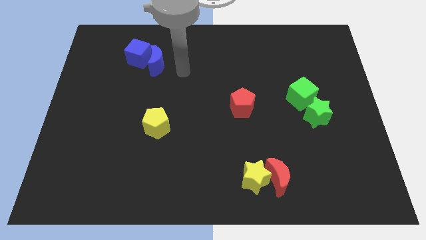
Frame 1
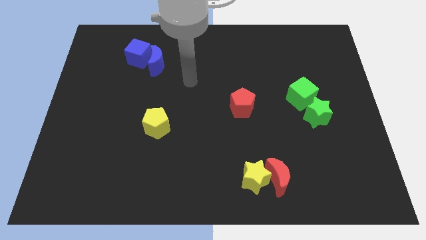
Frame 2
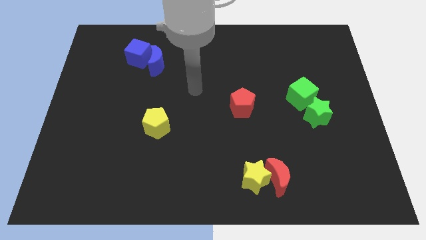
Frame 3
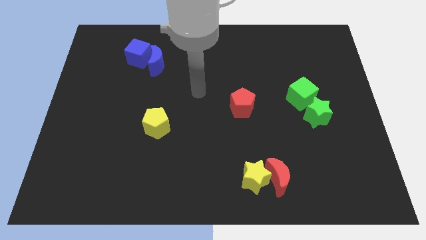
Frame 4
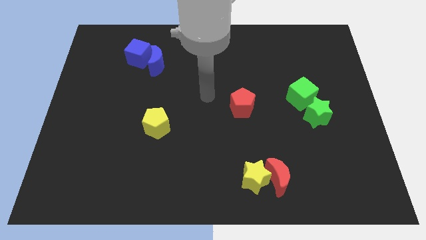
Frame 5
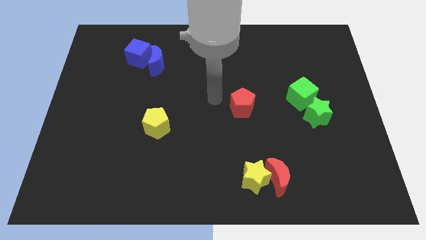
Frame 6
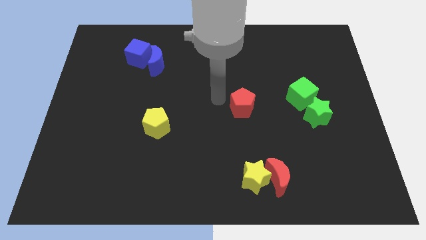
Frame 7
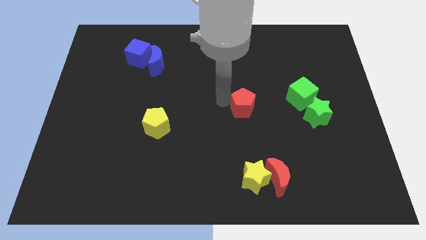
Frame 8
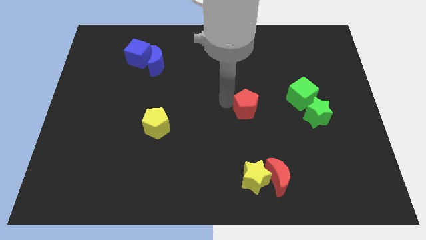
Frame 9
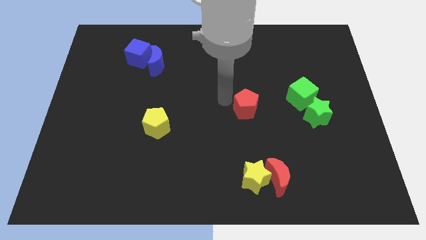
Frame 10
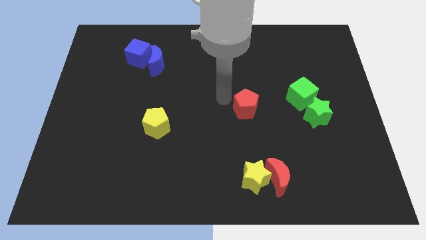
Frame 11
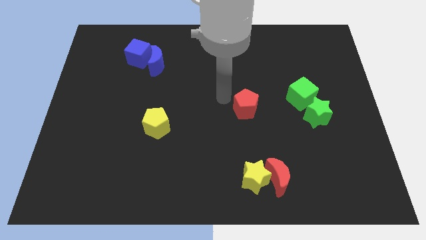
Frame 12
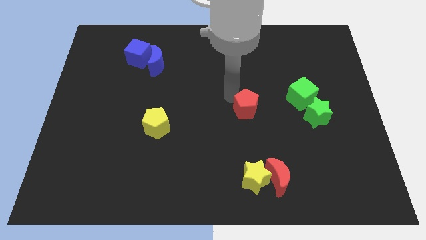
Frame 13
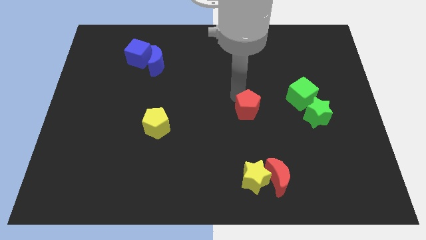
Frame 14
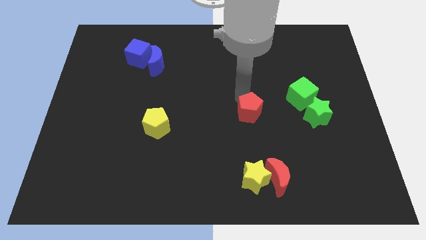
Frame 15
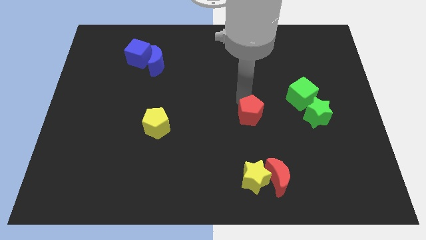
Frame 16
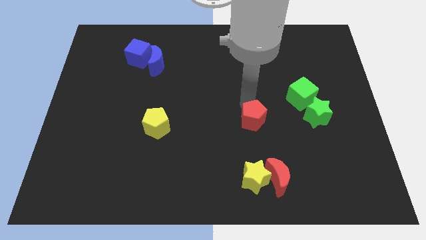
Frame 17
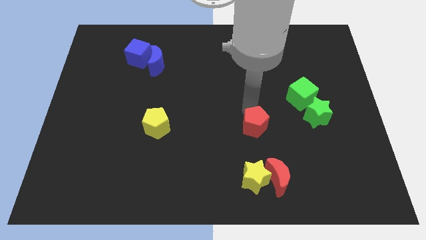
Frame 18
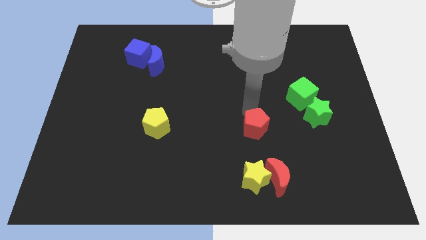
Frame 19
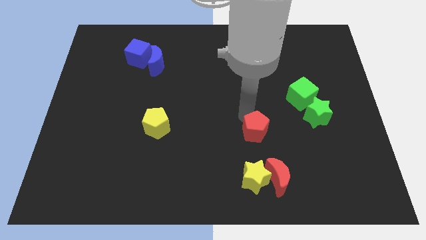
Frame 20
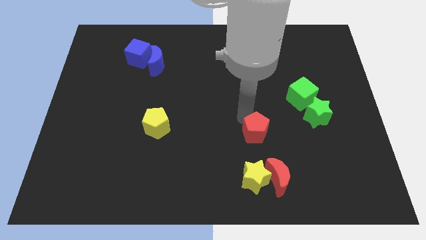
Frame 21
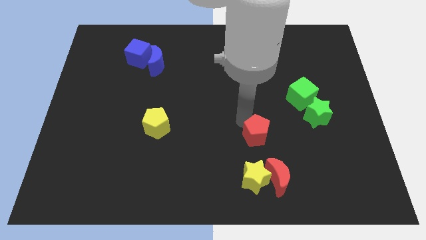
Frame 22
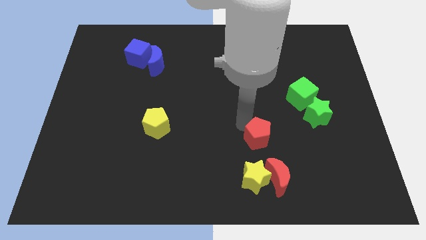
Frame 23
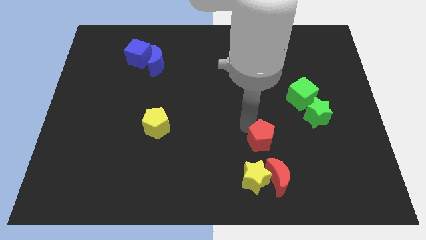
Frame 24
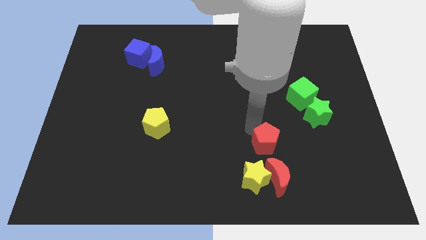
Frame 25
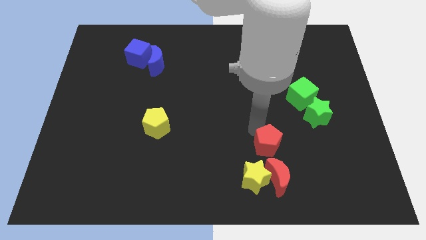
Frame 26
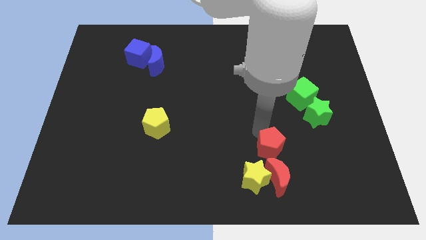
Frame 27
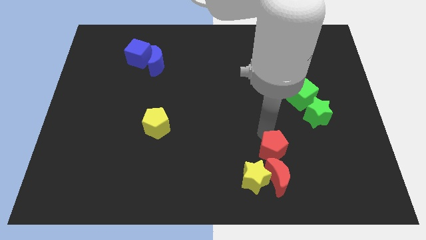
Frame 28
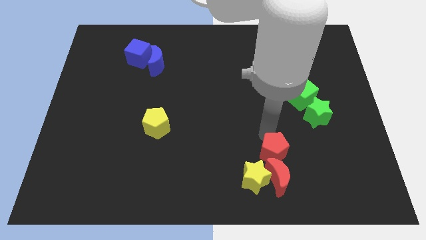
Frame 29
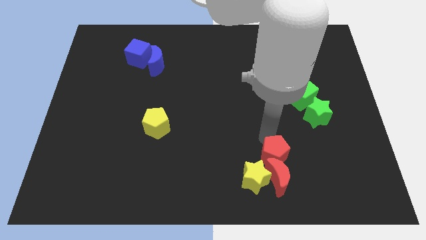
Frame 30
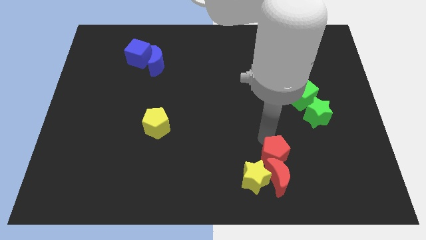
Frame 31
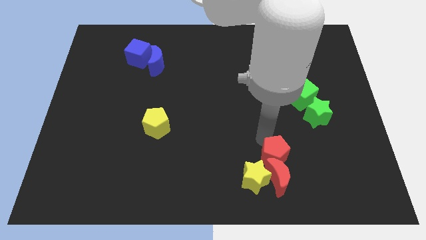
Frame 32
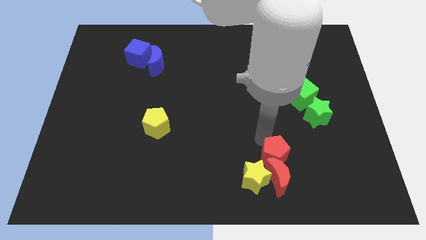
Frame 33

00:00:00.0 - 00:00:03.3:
drag the red pentagon into the top side of the red crescent

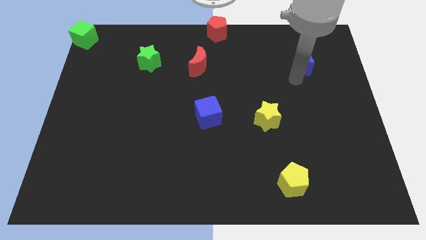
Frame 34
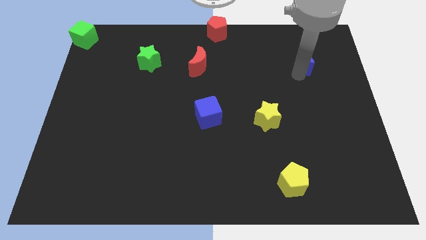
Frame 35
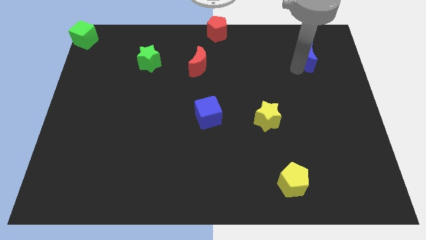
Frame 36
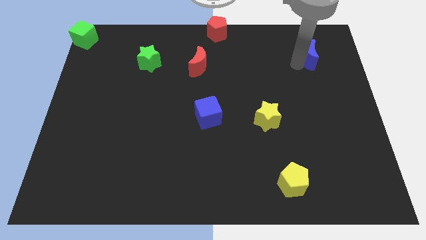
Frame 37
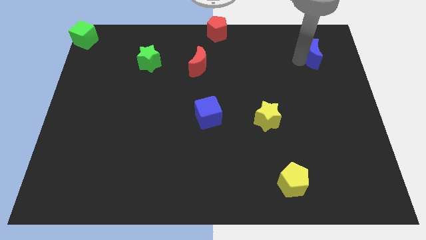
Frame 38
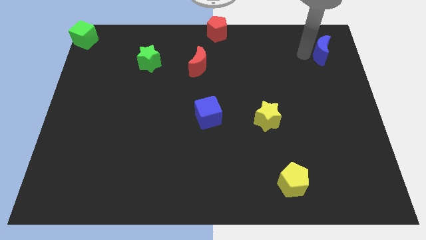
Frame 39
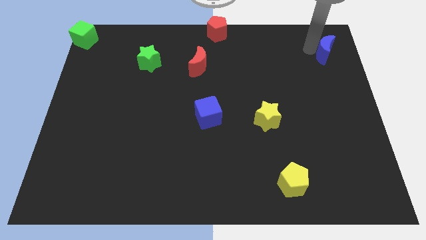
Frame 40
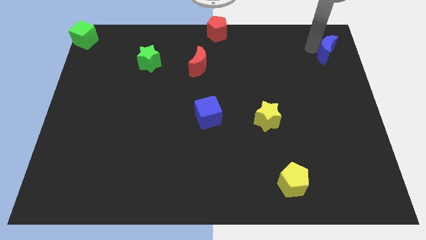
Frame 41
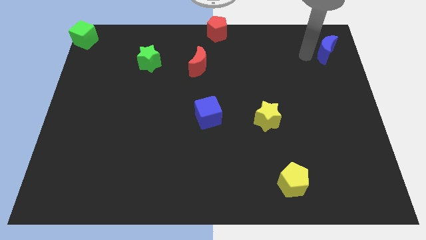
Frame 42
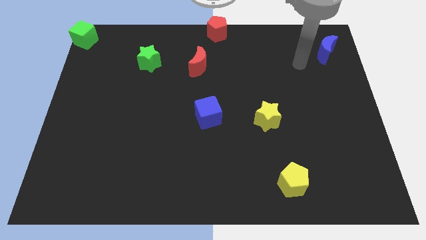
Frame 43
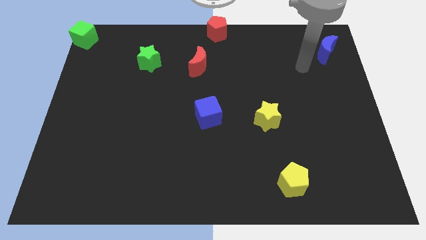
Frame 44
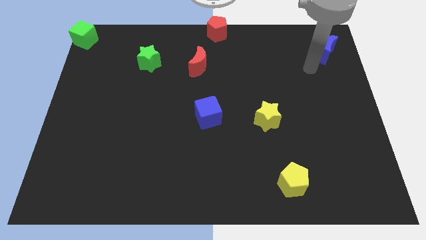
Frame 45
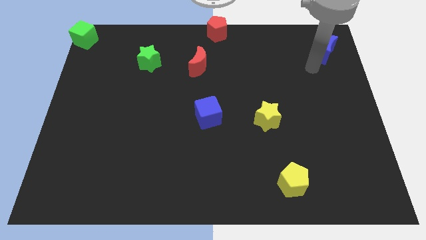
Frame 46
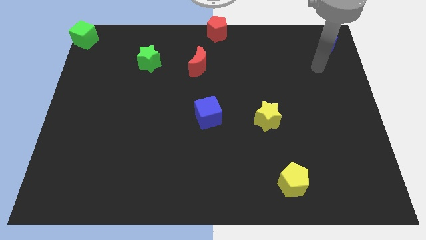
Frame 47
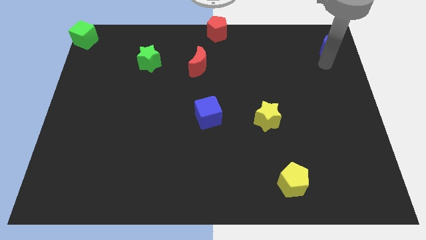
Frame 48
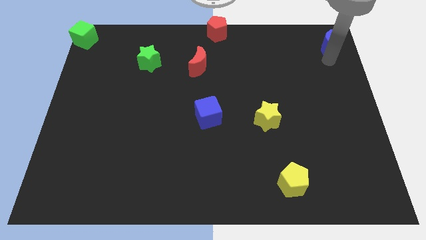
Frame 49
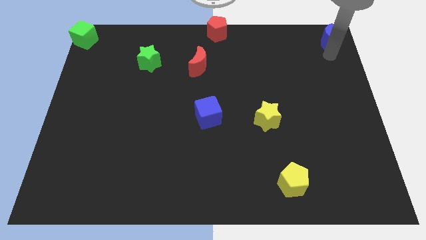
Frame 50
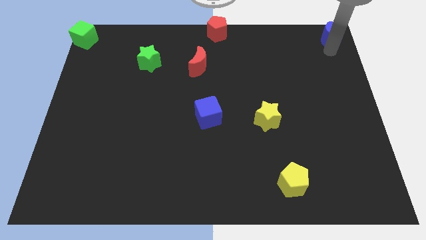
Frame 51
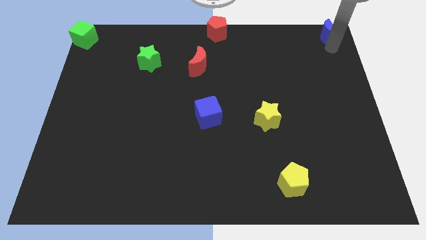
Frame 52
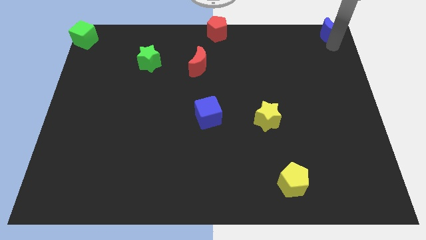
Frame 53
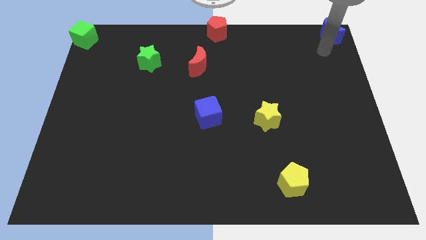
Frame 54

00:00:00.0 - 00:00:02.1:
slide blue moon to the top right

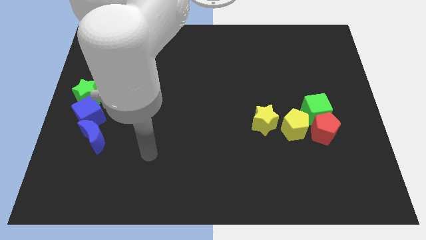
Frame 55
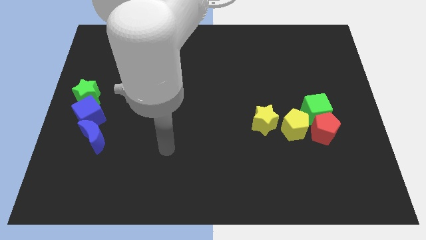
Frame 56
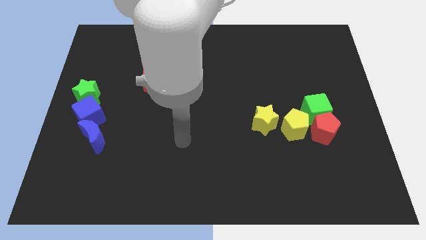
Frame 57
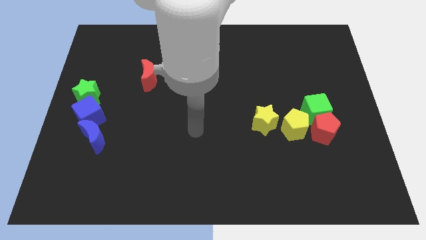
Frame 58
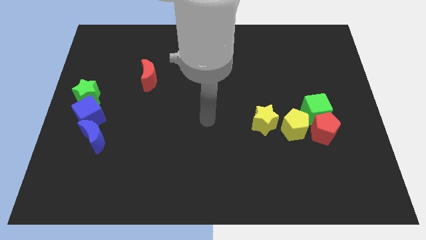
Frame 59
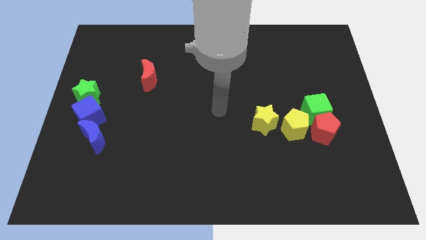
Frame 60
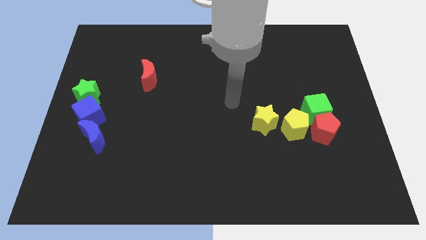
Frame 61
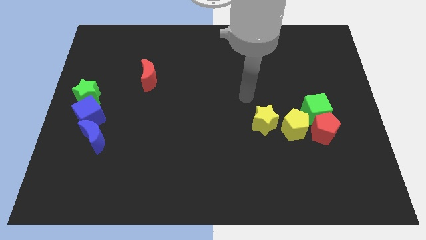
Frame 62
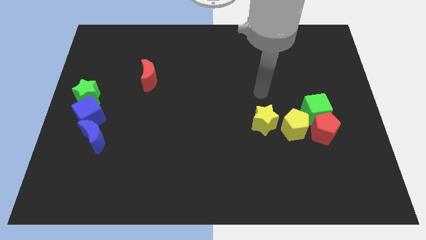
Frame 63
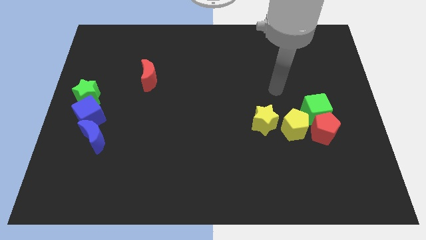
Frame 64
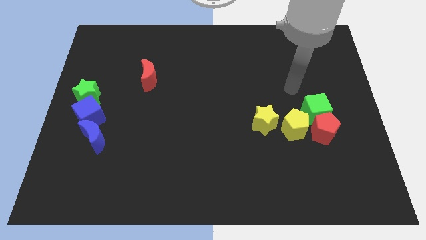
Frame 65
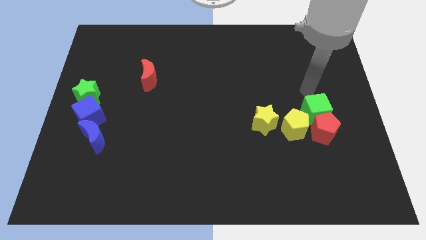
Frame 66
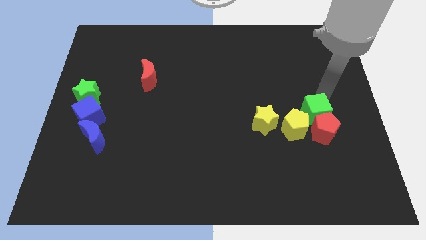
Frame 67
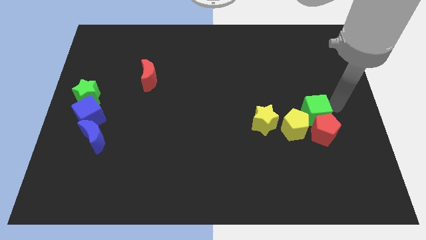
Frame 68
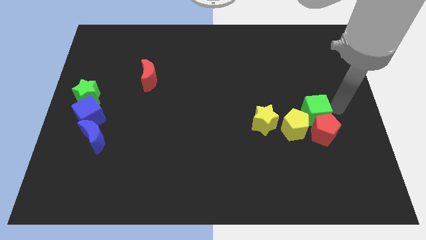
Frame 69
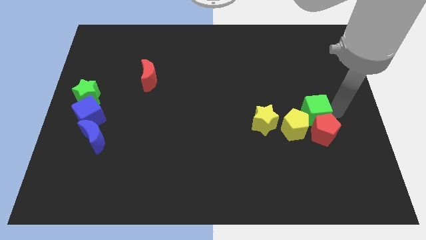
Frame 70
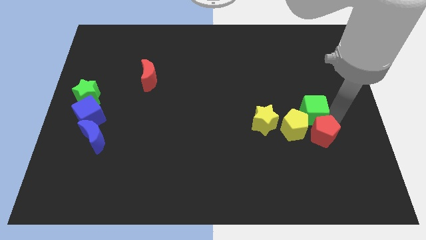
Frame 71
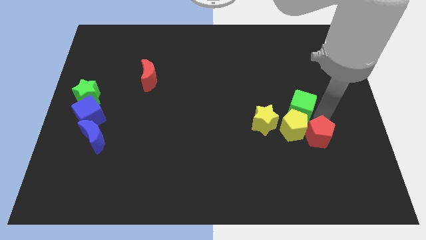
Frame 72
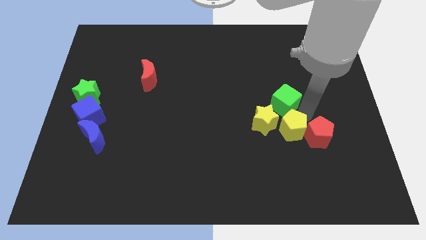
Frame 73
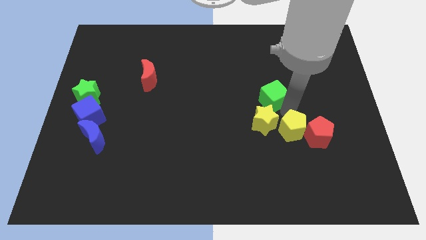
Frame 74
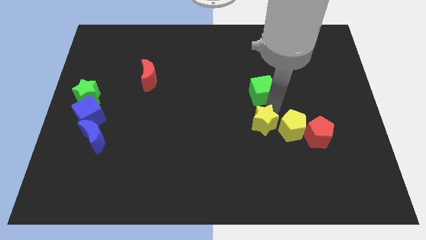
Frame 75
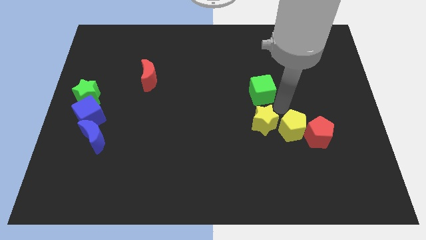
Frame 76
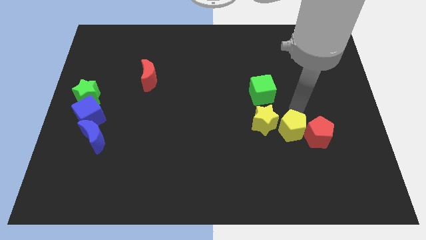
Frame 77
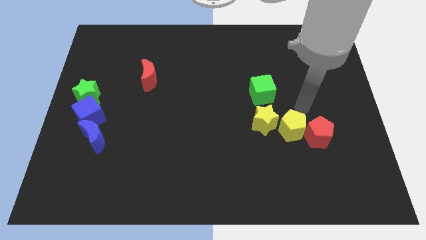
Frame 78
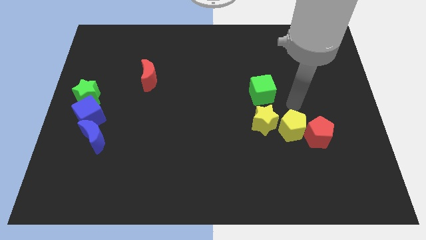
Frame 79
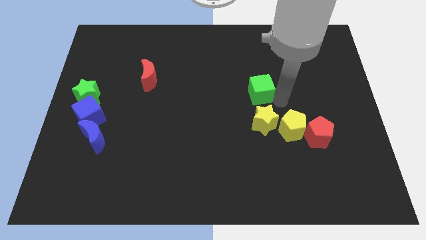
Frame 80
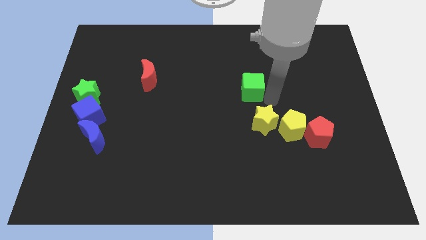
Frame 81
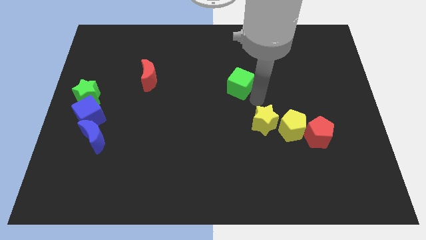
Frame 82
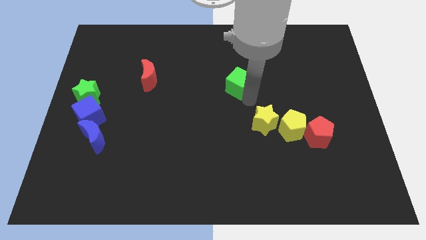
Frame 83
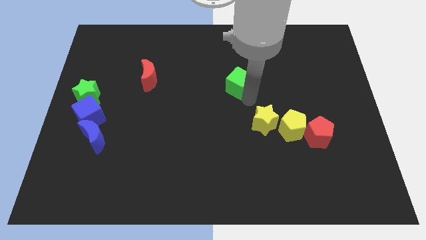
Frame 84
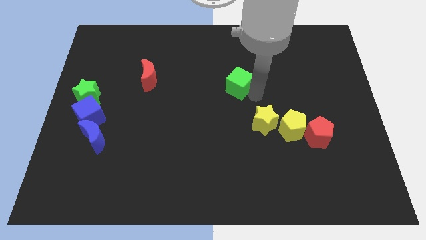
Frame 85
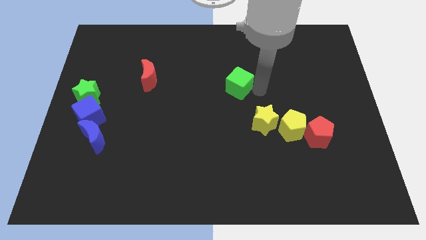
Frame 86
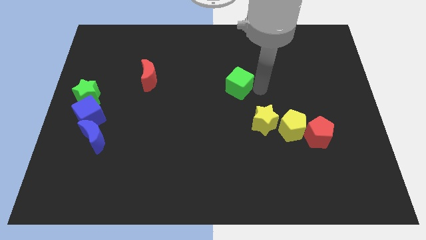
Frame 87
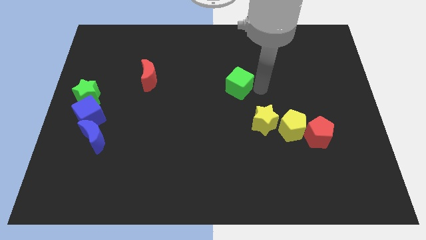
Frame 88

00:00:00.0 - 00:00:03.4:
place the green cube diagonally to the left of the yellow star

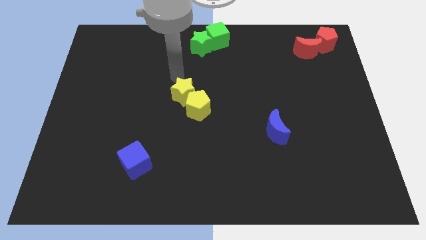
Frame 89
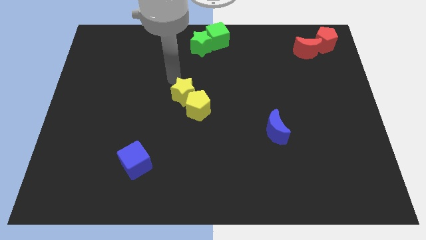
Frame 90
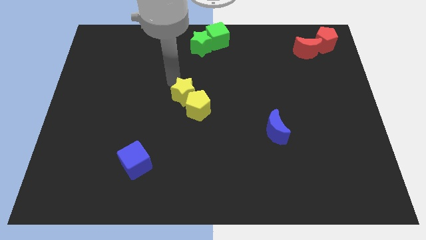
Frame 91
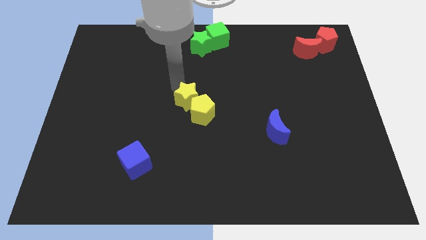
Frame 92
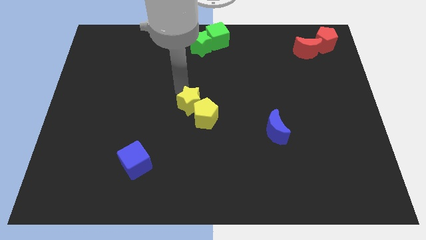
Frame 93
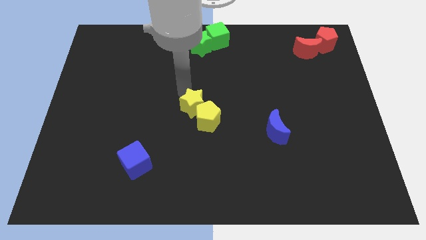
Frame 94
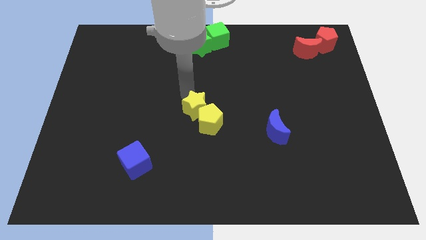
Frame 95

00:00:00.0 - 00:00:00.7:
push yellow blocks towards the center
